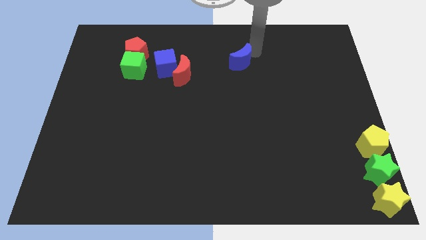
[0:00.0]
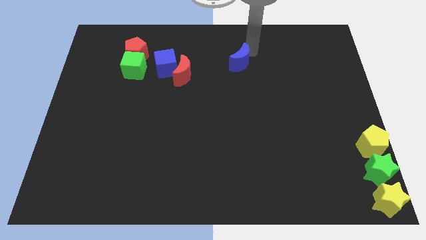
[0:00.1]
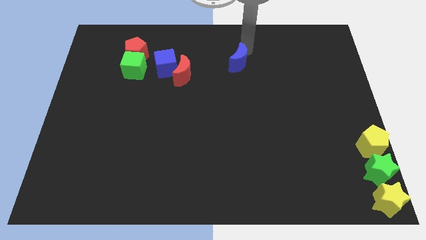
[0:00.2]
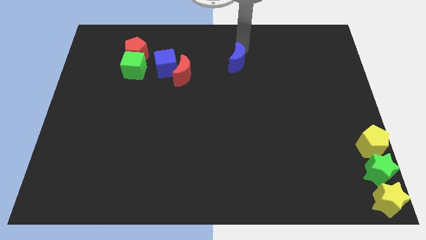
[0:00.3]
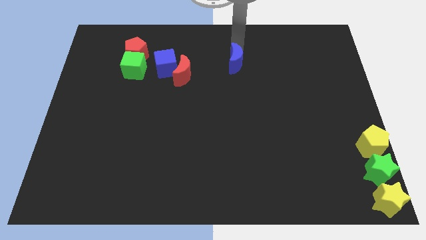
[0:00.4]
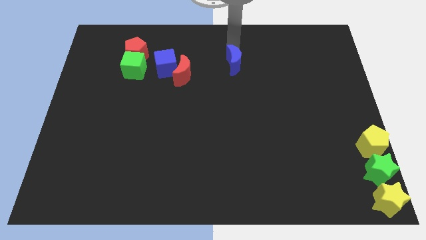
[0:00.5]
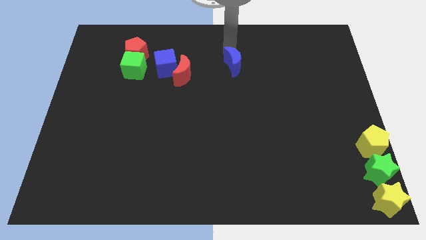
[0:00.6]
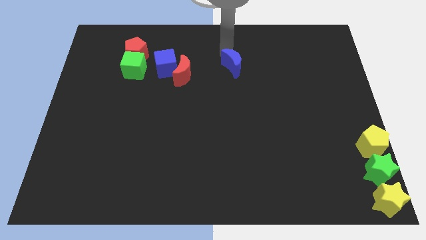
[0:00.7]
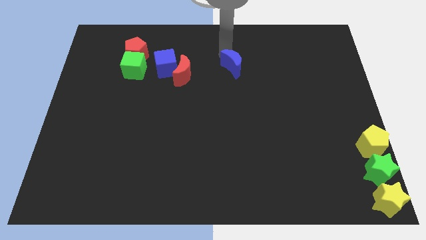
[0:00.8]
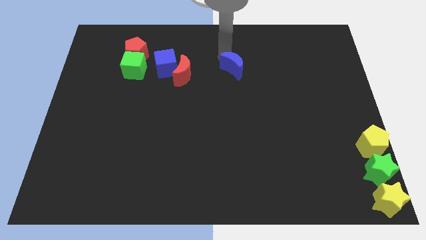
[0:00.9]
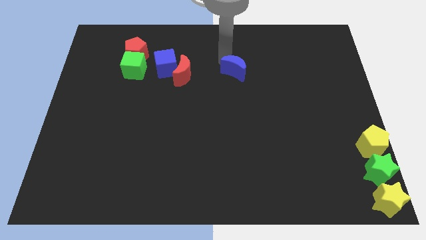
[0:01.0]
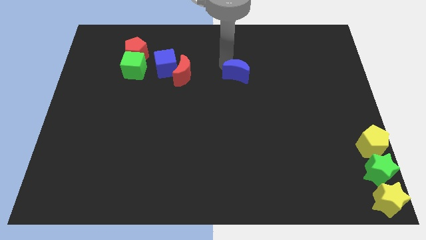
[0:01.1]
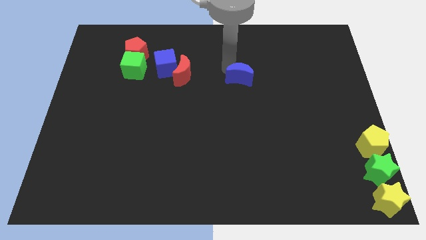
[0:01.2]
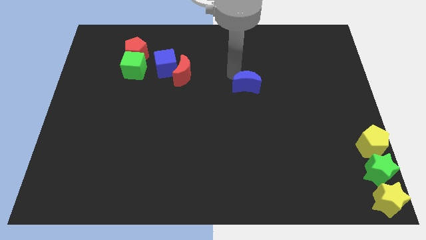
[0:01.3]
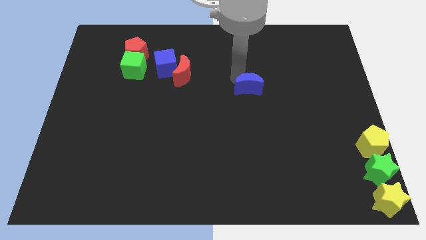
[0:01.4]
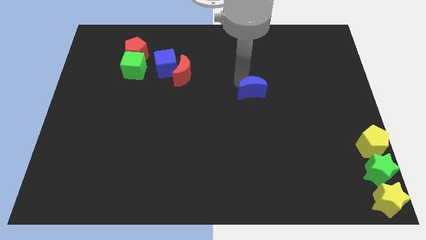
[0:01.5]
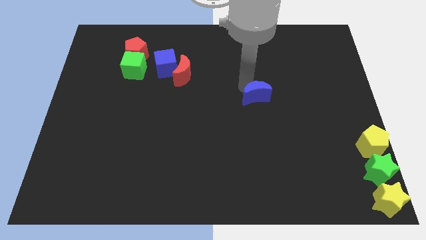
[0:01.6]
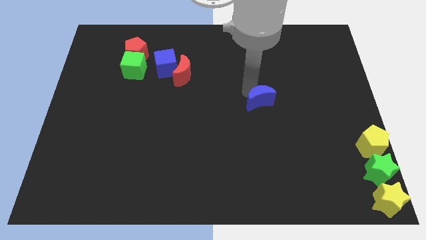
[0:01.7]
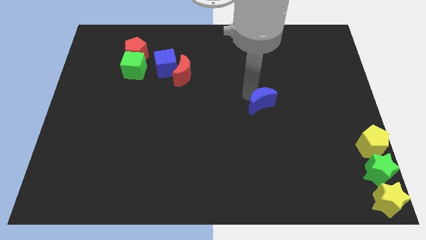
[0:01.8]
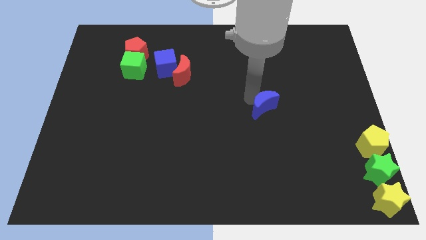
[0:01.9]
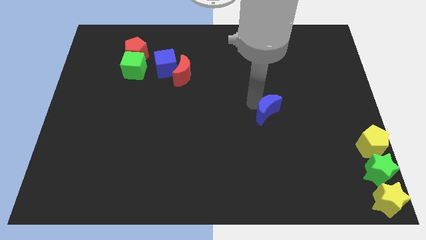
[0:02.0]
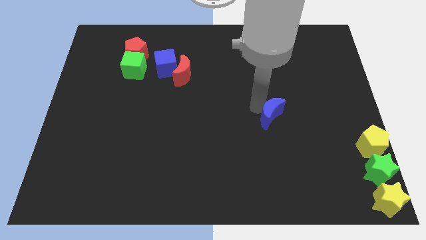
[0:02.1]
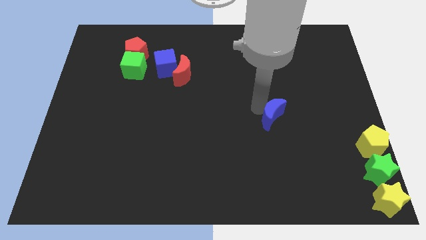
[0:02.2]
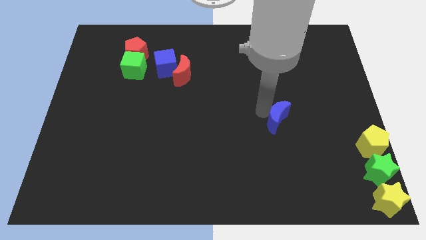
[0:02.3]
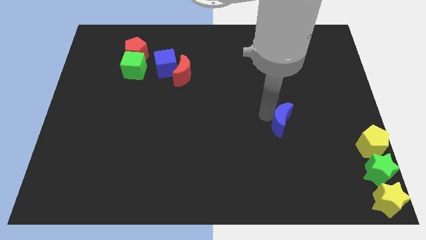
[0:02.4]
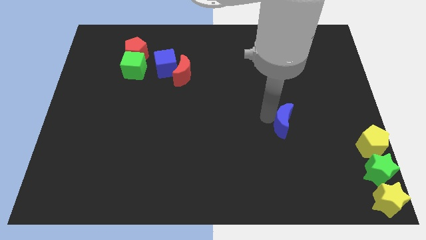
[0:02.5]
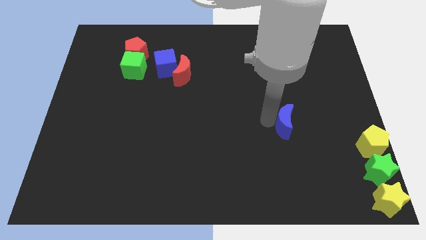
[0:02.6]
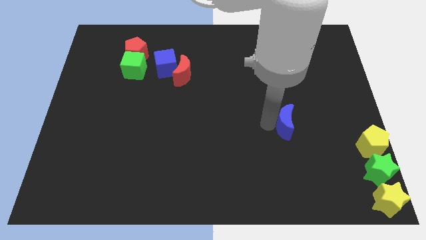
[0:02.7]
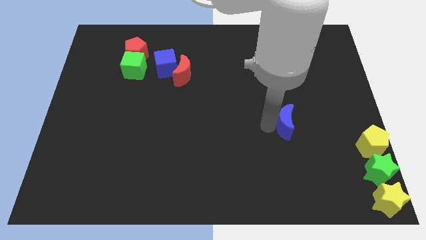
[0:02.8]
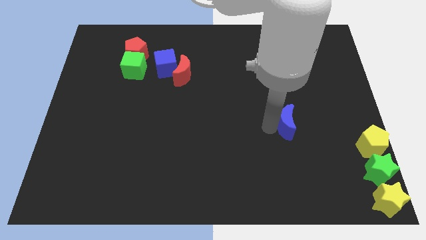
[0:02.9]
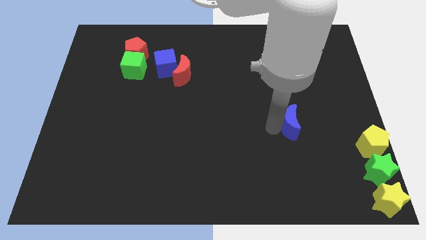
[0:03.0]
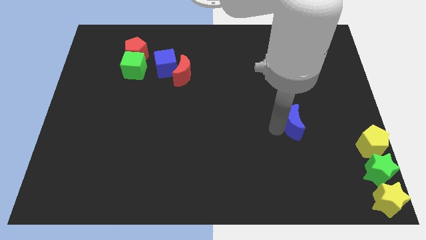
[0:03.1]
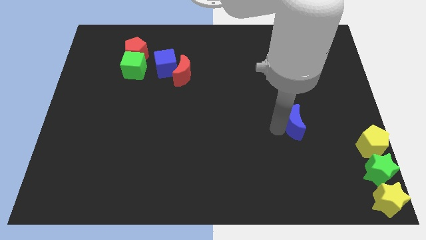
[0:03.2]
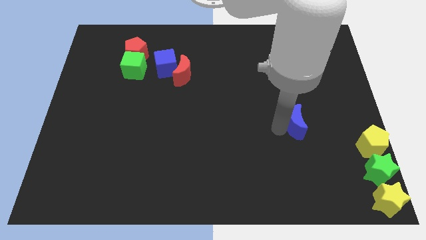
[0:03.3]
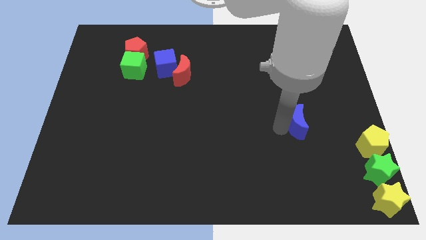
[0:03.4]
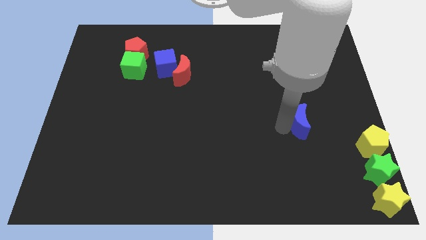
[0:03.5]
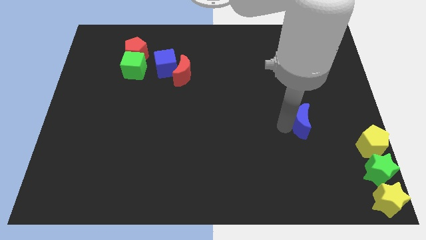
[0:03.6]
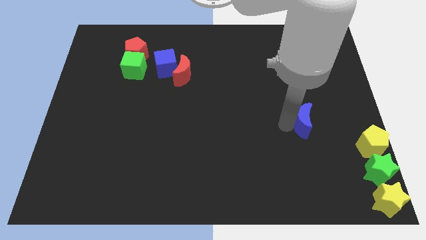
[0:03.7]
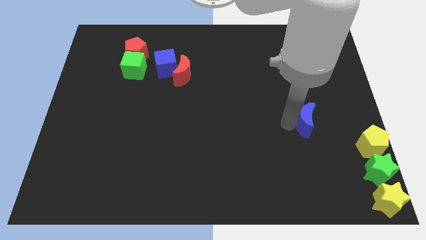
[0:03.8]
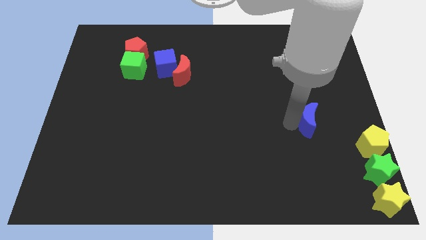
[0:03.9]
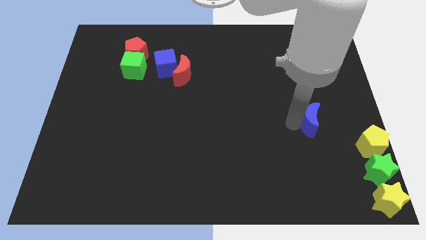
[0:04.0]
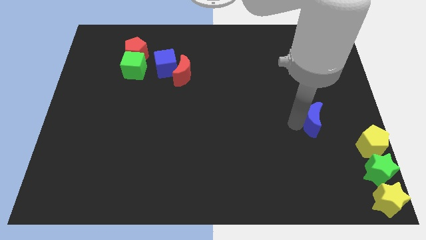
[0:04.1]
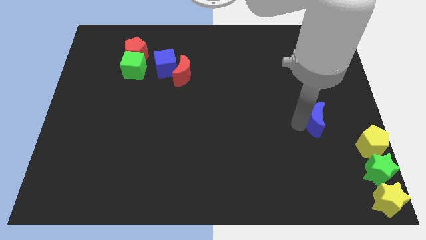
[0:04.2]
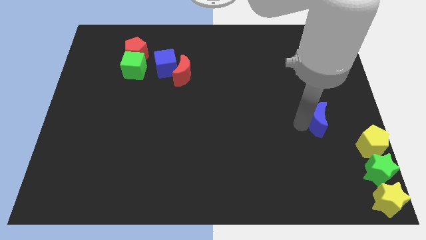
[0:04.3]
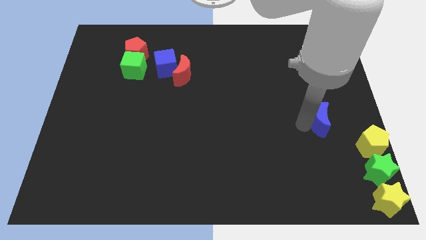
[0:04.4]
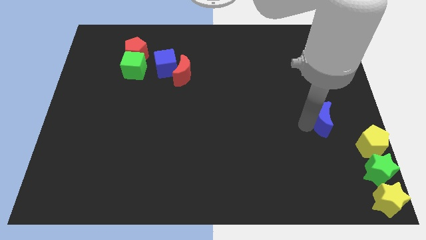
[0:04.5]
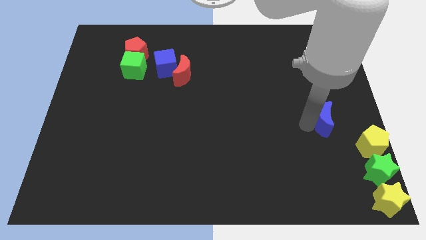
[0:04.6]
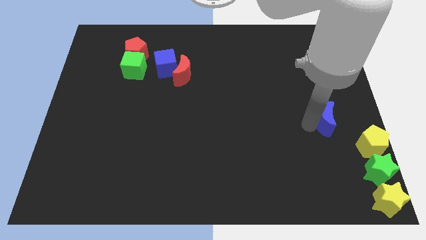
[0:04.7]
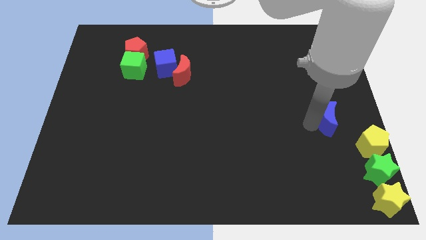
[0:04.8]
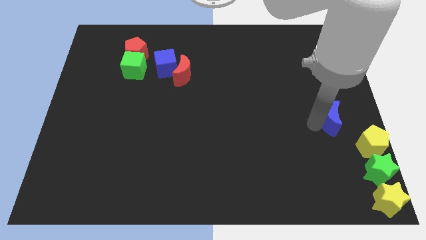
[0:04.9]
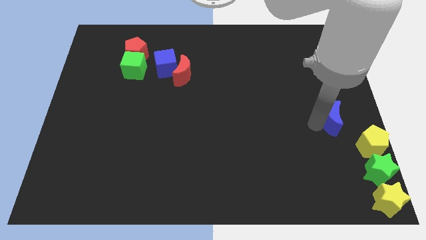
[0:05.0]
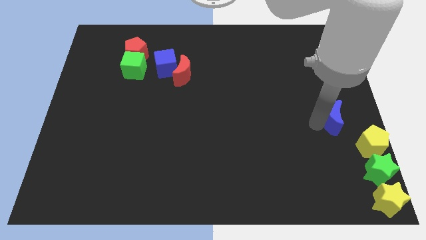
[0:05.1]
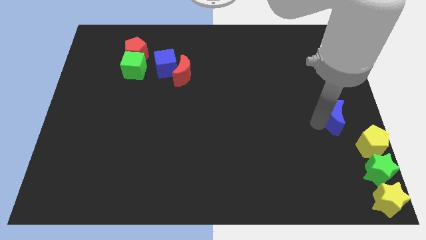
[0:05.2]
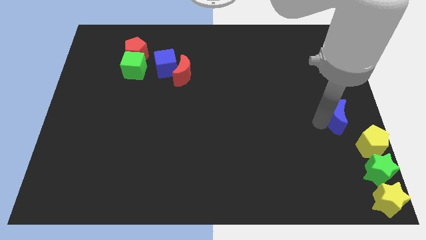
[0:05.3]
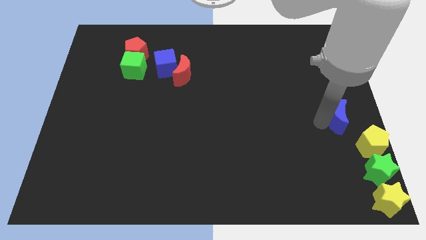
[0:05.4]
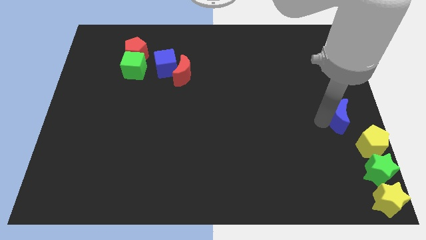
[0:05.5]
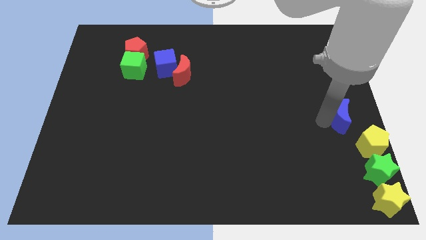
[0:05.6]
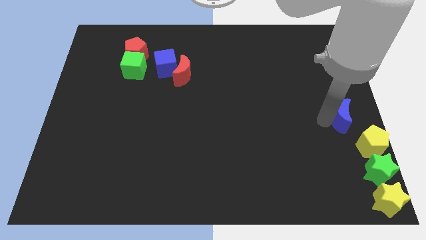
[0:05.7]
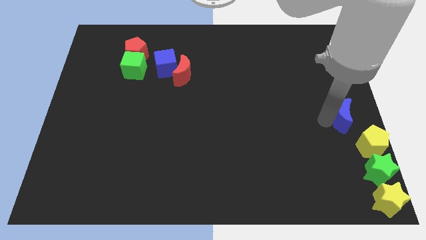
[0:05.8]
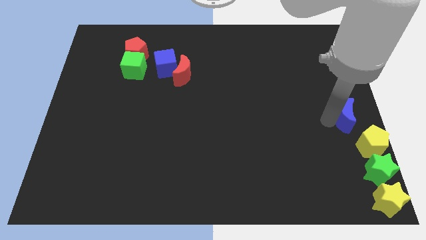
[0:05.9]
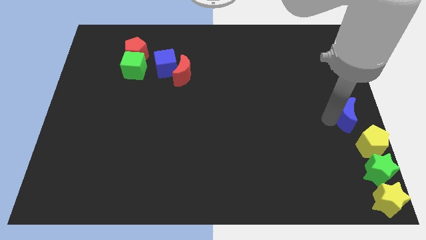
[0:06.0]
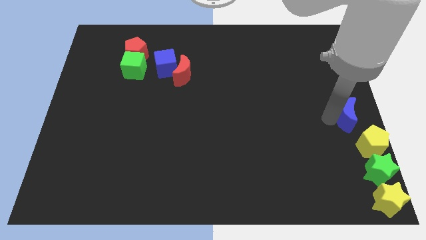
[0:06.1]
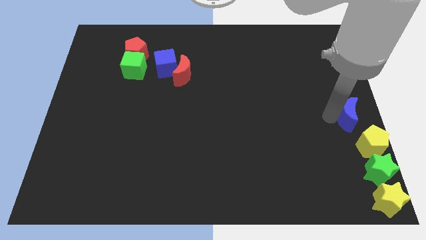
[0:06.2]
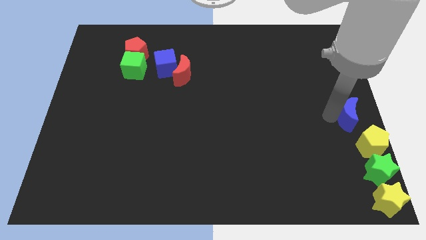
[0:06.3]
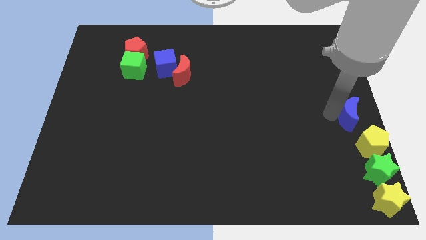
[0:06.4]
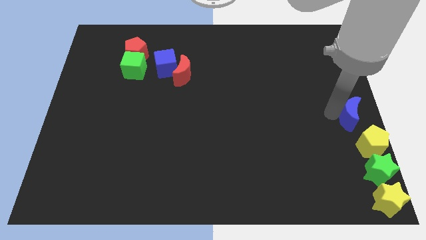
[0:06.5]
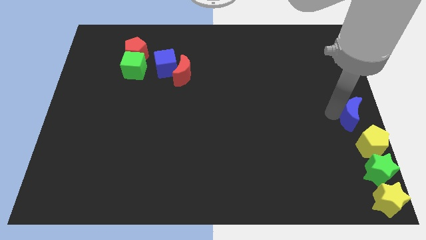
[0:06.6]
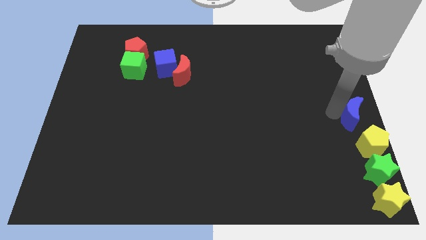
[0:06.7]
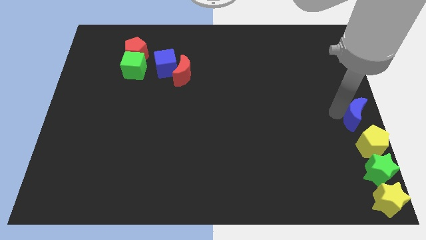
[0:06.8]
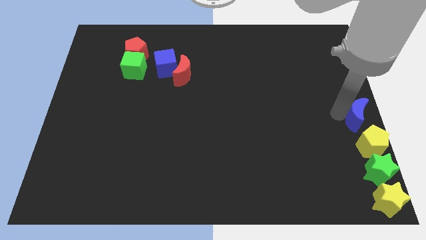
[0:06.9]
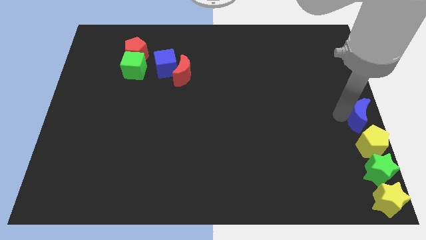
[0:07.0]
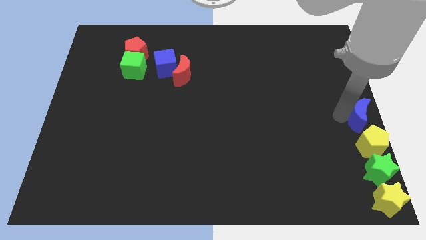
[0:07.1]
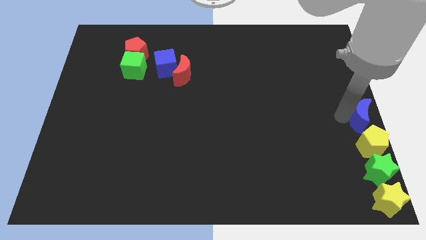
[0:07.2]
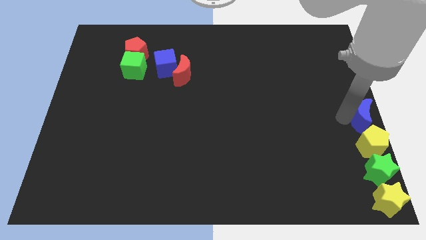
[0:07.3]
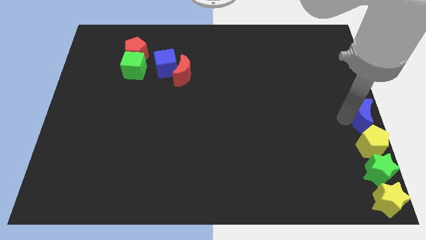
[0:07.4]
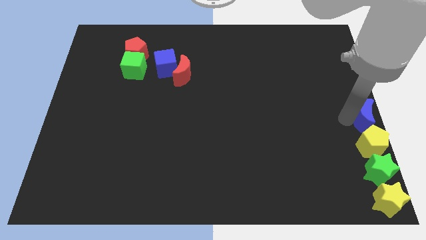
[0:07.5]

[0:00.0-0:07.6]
push the blue crescent to the top of the yellow pentagon

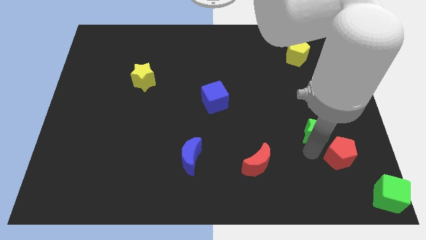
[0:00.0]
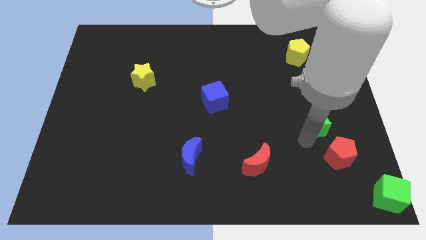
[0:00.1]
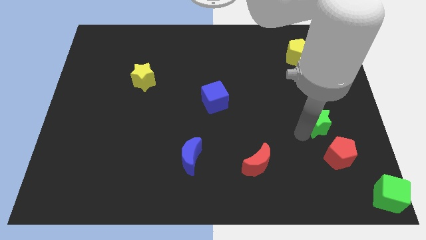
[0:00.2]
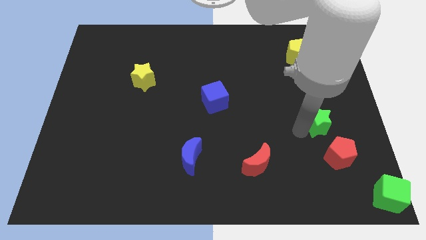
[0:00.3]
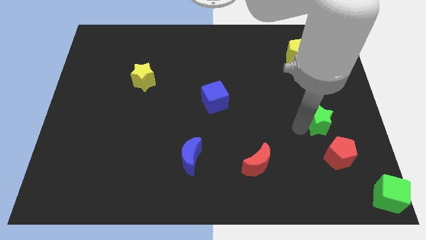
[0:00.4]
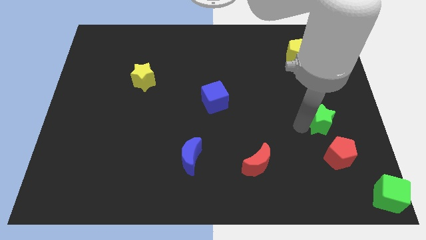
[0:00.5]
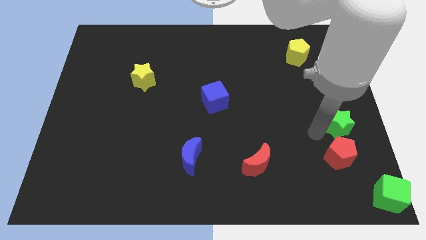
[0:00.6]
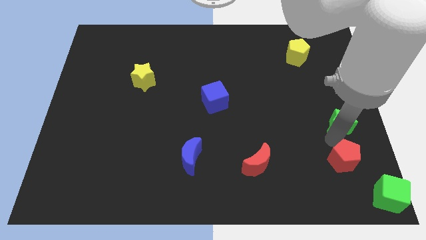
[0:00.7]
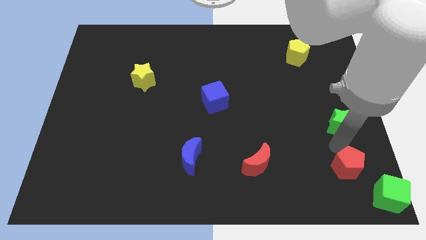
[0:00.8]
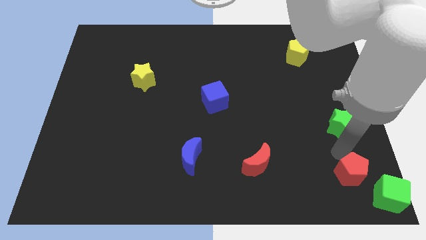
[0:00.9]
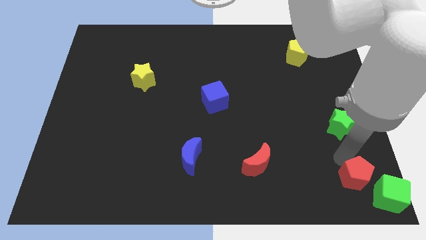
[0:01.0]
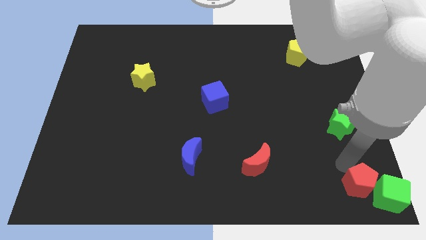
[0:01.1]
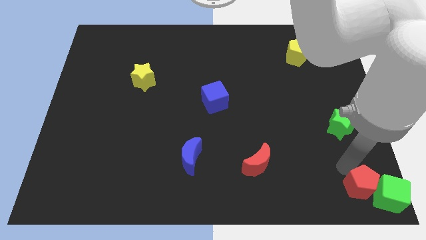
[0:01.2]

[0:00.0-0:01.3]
push the red pentagon beside the left to the green cube
